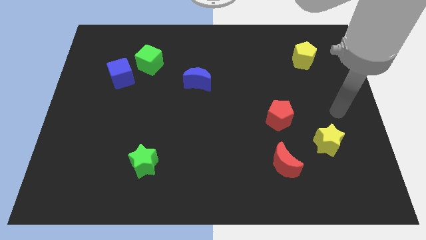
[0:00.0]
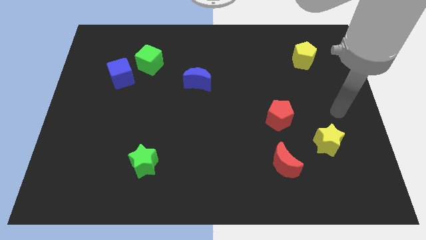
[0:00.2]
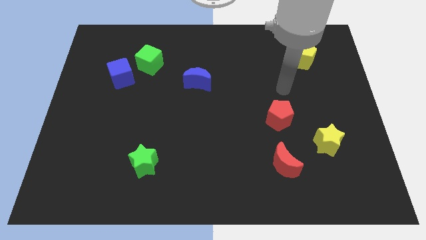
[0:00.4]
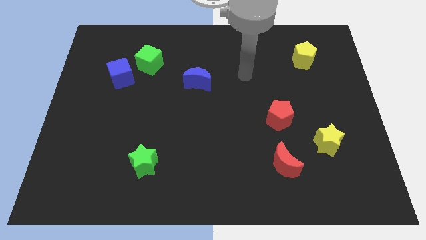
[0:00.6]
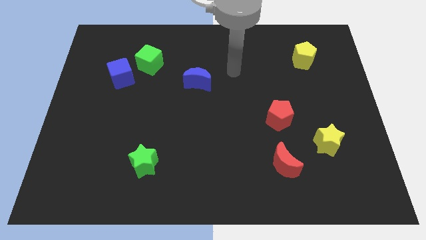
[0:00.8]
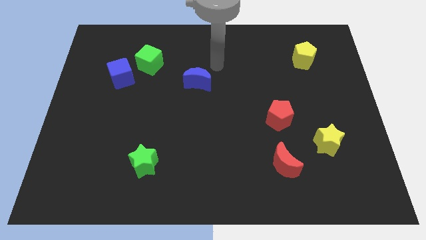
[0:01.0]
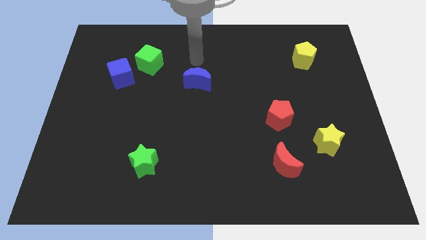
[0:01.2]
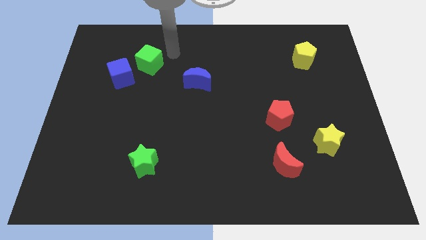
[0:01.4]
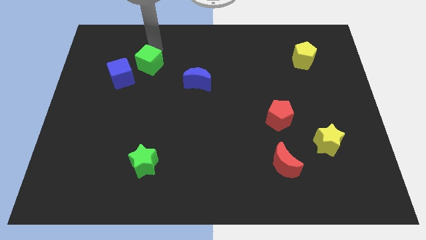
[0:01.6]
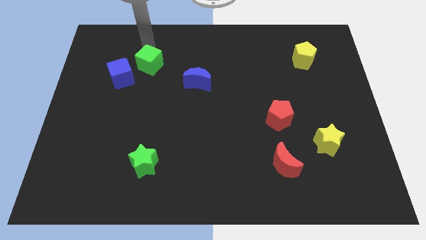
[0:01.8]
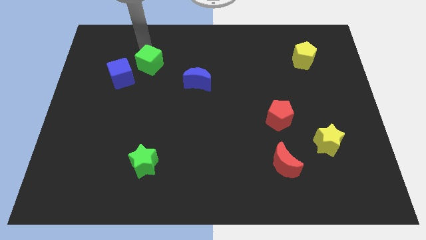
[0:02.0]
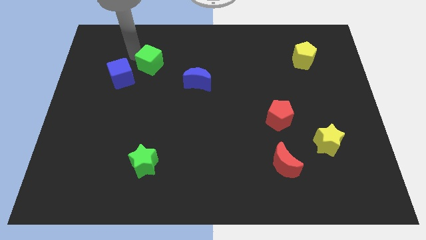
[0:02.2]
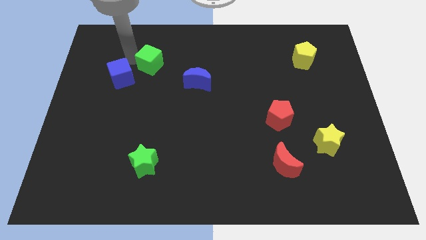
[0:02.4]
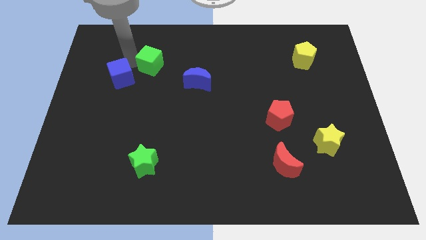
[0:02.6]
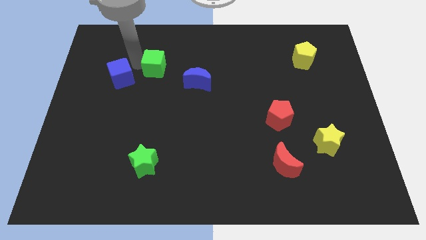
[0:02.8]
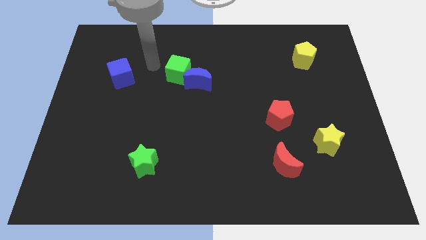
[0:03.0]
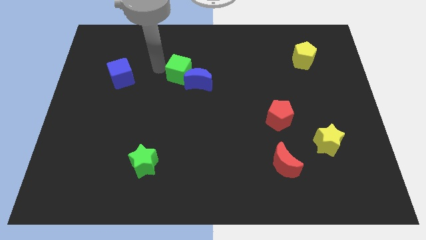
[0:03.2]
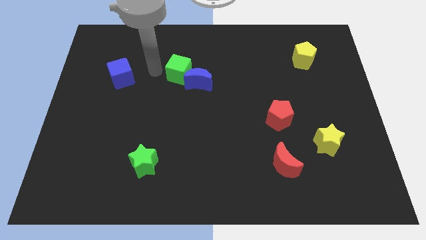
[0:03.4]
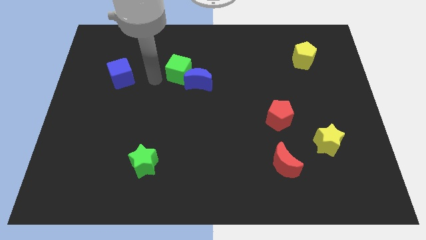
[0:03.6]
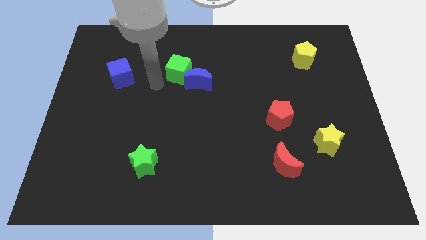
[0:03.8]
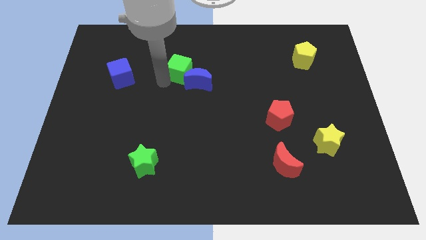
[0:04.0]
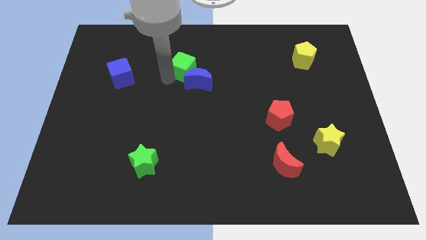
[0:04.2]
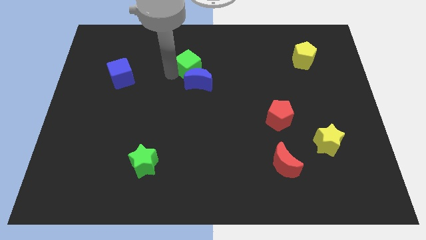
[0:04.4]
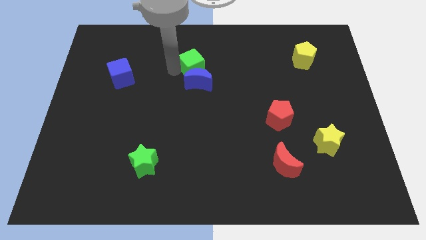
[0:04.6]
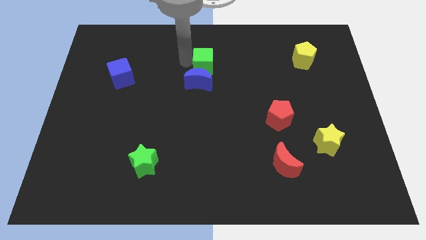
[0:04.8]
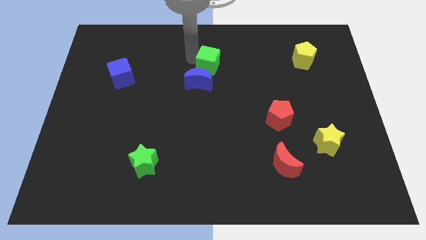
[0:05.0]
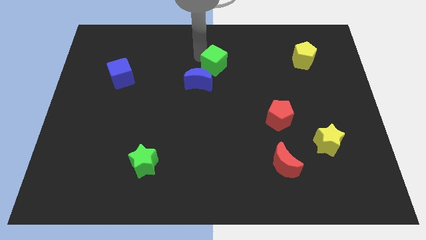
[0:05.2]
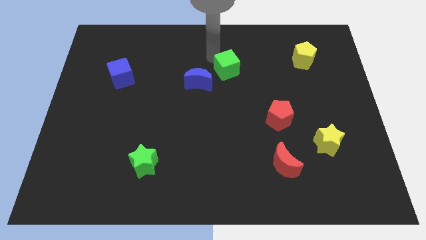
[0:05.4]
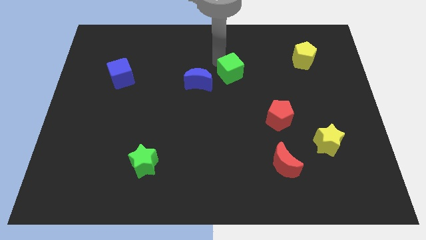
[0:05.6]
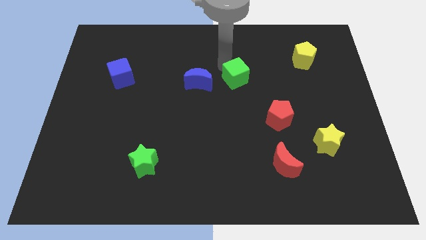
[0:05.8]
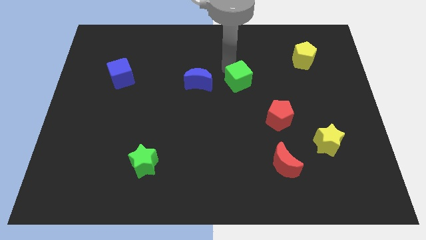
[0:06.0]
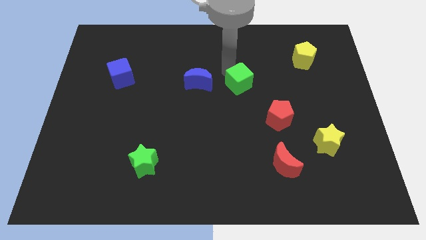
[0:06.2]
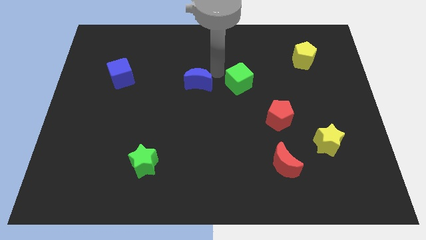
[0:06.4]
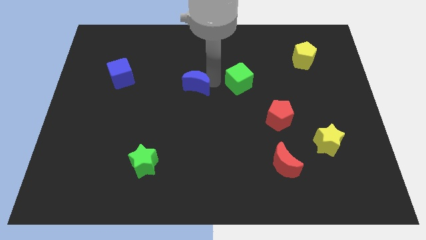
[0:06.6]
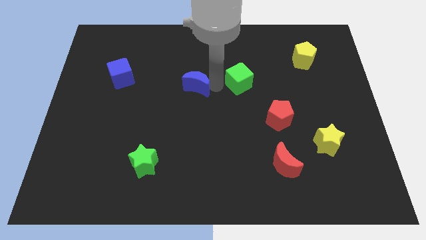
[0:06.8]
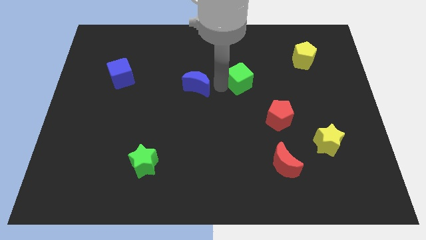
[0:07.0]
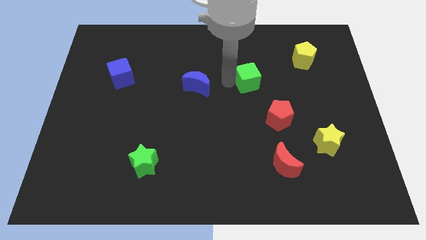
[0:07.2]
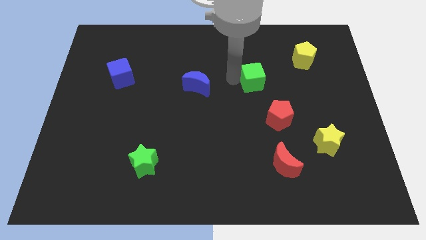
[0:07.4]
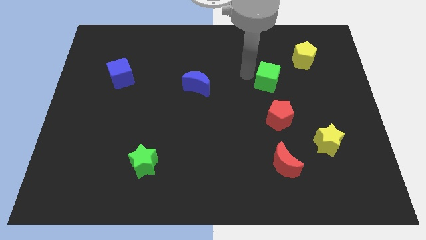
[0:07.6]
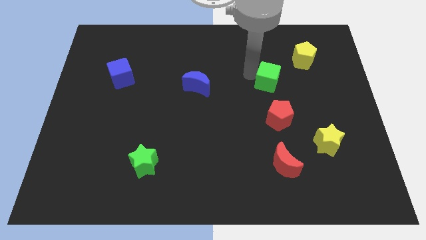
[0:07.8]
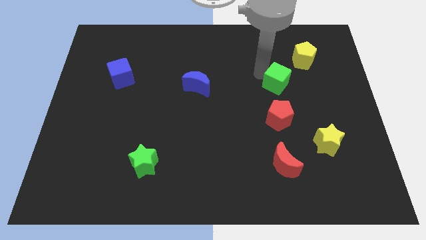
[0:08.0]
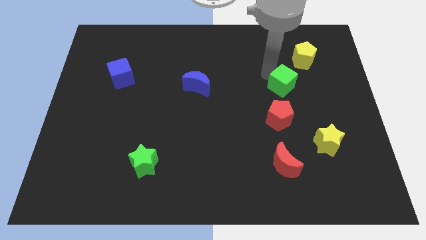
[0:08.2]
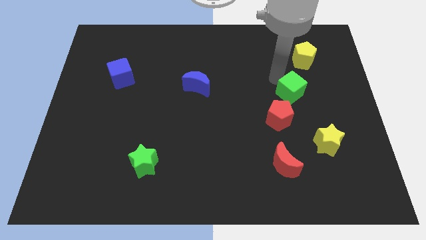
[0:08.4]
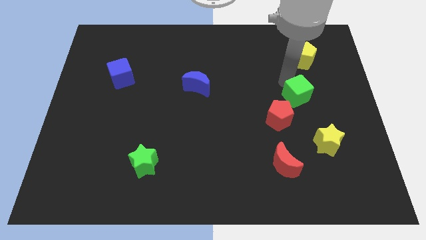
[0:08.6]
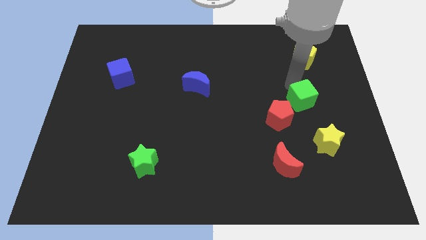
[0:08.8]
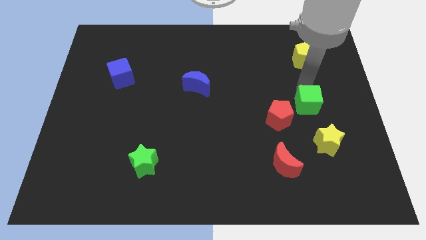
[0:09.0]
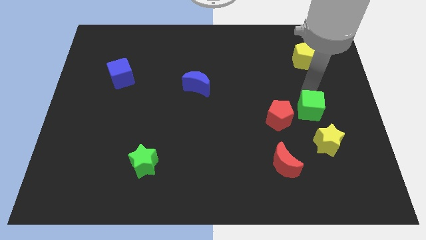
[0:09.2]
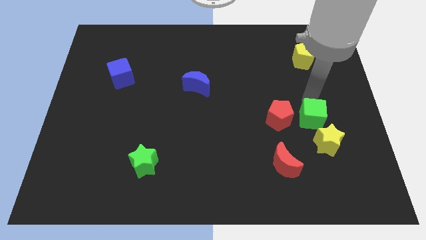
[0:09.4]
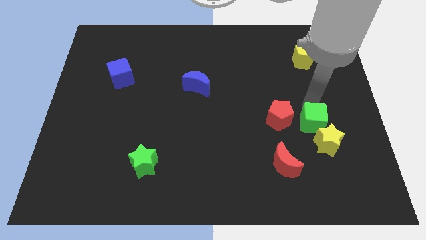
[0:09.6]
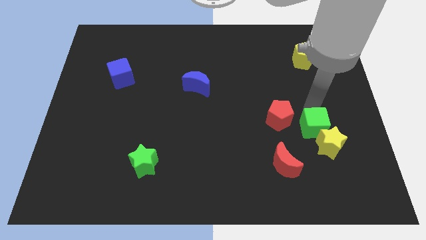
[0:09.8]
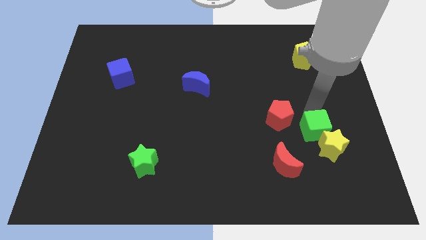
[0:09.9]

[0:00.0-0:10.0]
slide the green cube close to the yellow star

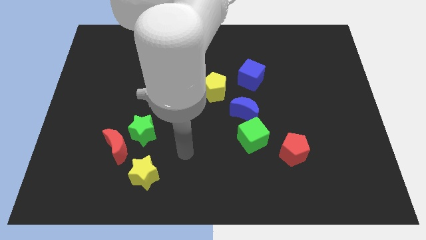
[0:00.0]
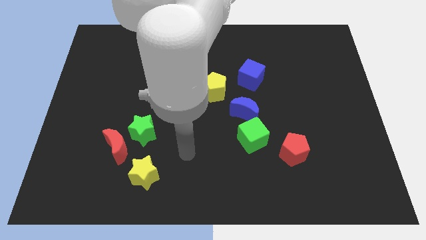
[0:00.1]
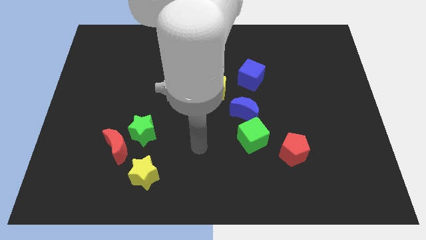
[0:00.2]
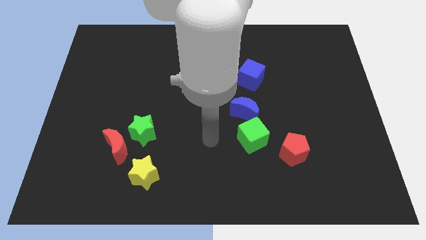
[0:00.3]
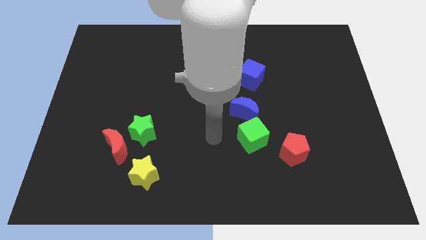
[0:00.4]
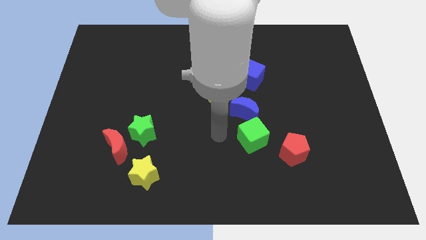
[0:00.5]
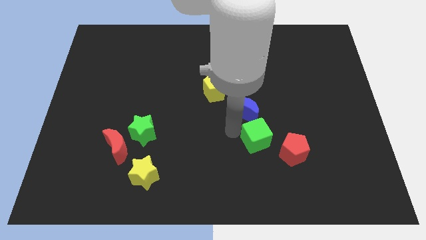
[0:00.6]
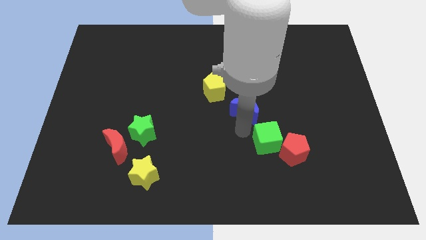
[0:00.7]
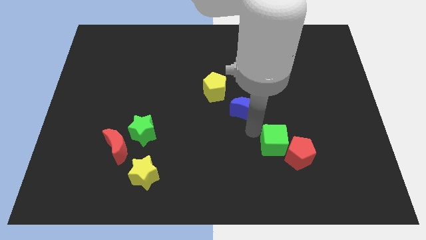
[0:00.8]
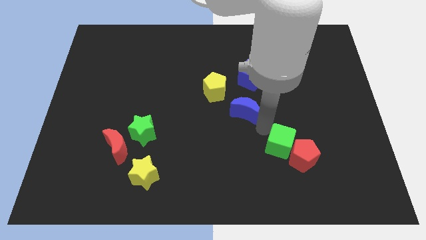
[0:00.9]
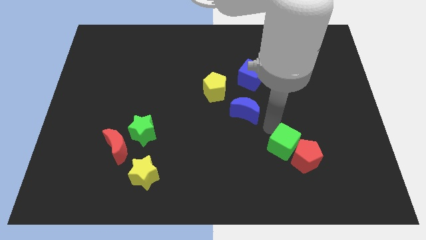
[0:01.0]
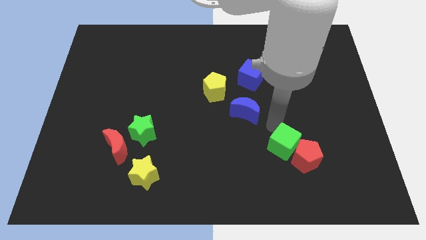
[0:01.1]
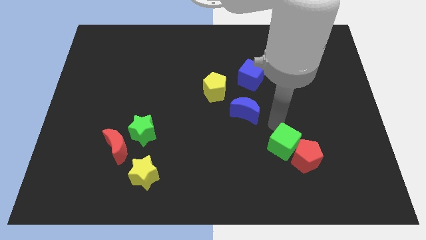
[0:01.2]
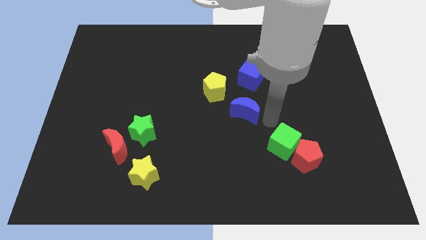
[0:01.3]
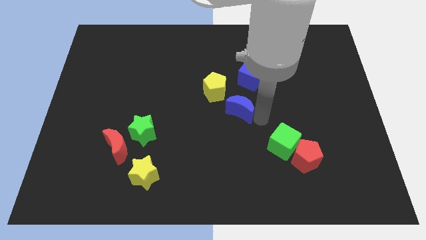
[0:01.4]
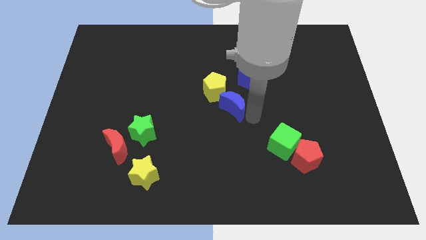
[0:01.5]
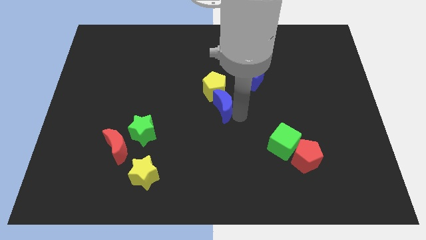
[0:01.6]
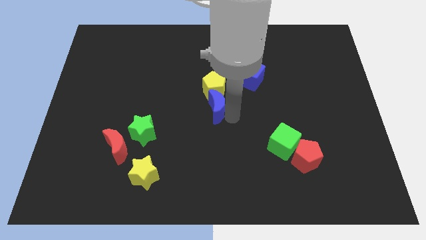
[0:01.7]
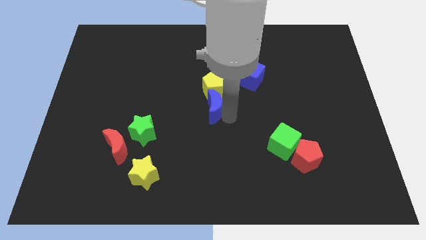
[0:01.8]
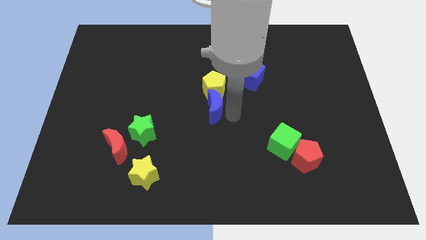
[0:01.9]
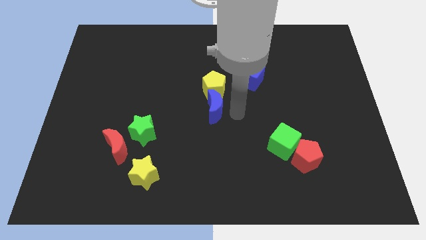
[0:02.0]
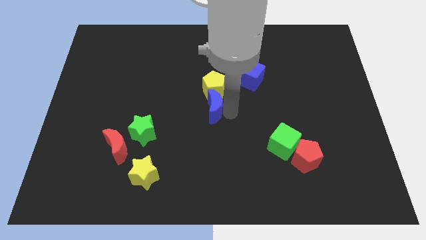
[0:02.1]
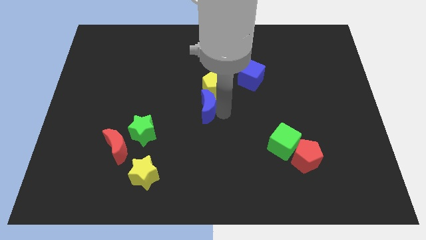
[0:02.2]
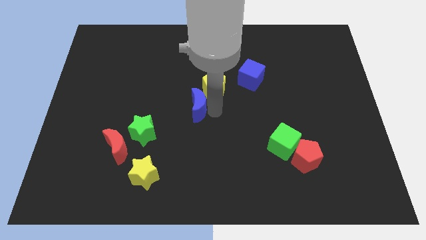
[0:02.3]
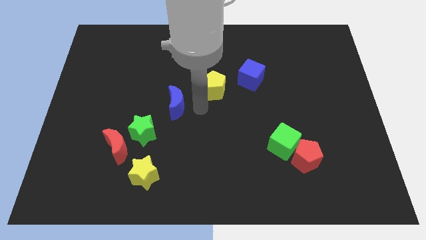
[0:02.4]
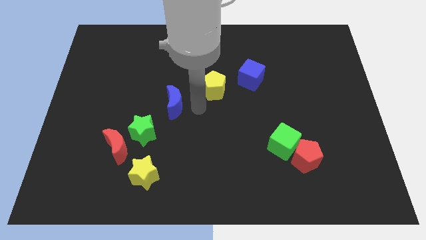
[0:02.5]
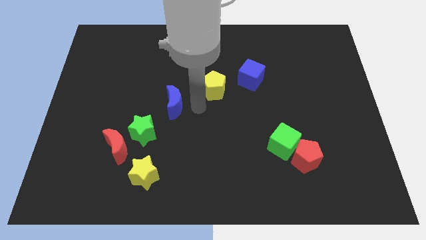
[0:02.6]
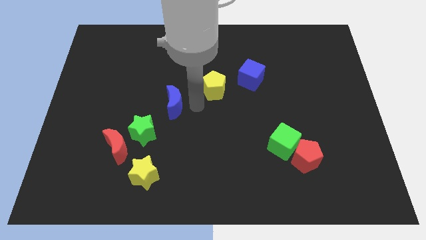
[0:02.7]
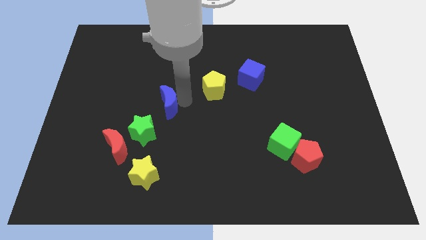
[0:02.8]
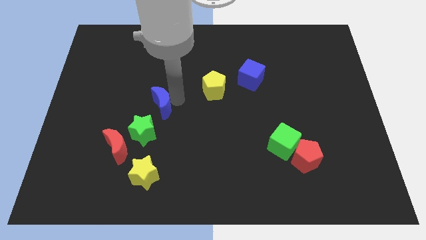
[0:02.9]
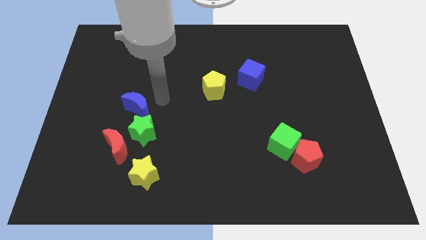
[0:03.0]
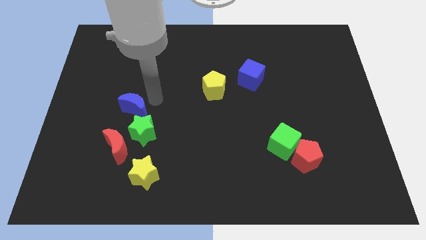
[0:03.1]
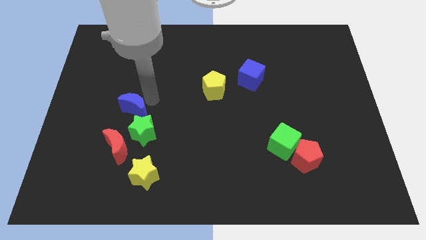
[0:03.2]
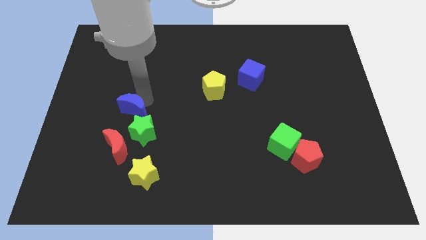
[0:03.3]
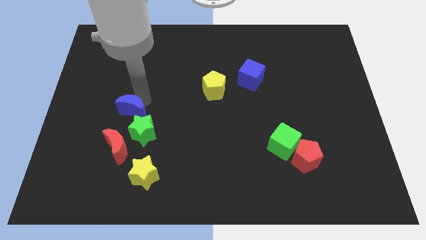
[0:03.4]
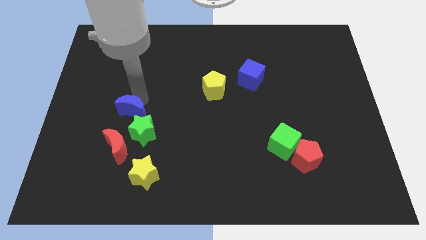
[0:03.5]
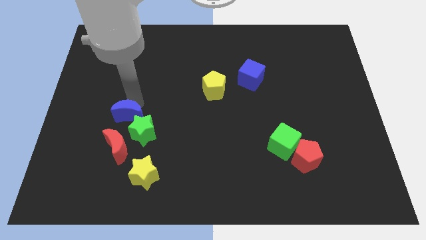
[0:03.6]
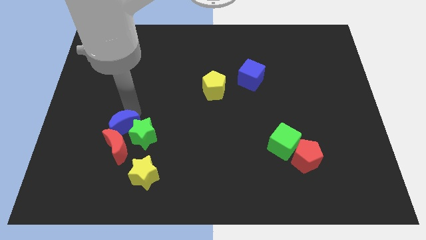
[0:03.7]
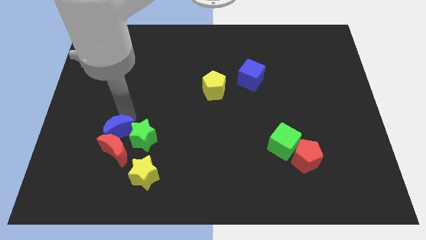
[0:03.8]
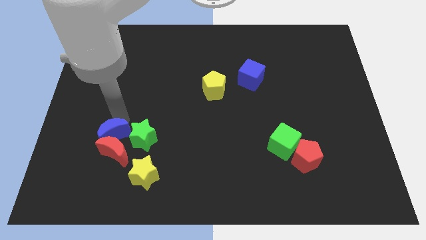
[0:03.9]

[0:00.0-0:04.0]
push the blue moon next to the red moon
